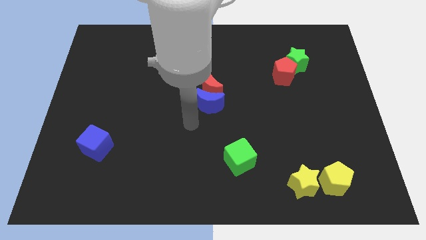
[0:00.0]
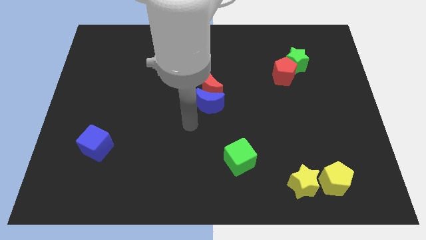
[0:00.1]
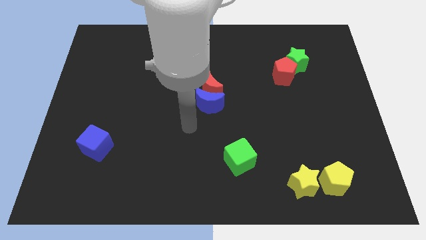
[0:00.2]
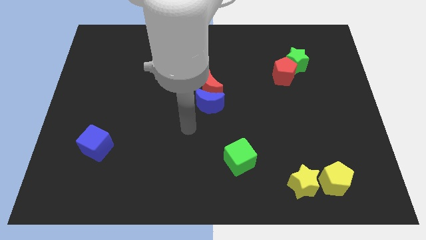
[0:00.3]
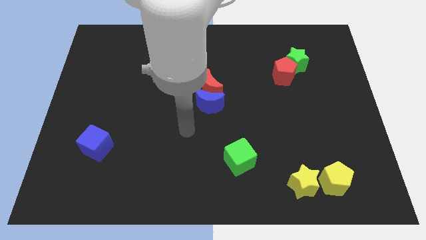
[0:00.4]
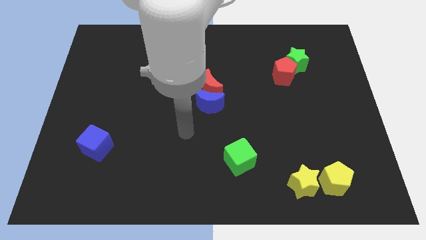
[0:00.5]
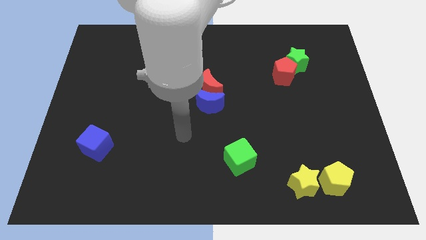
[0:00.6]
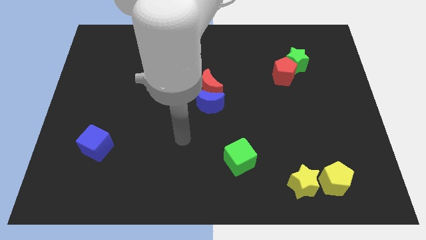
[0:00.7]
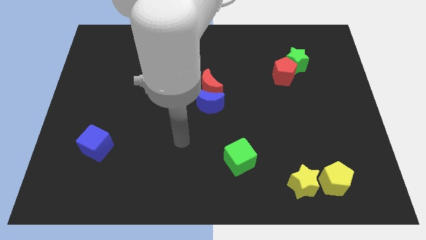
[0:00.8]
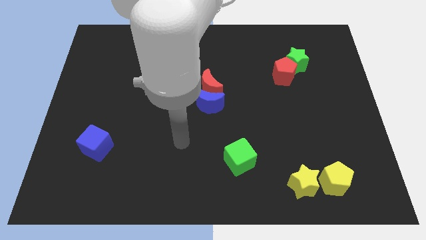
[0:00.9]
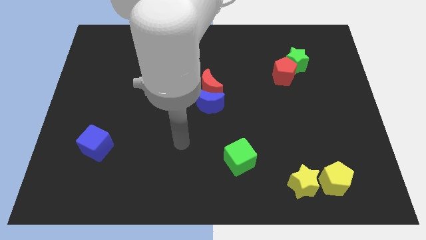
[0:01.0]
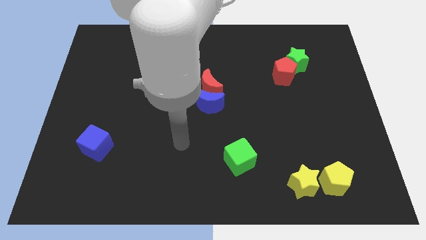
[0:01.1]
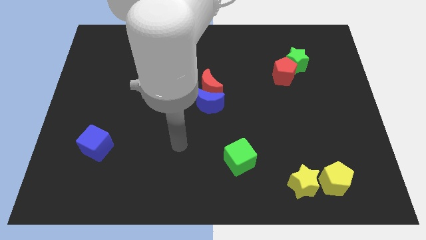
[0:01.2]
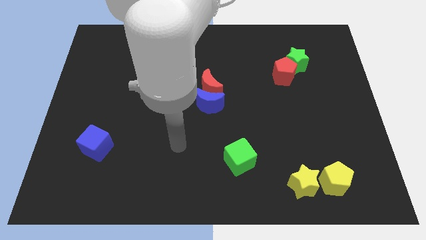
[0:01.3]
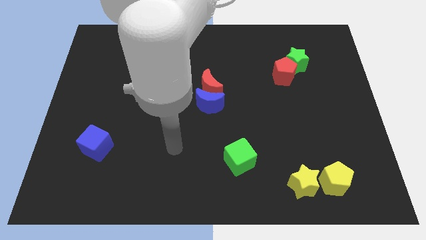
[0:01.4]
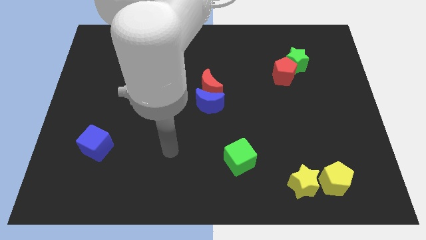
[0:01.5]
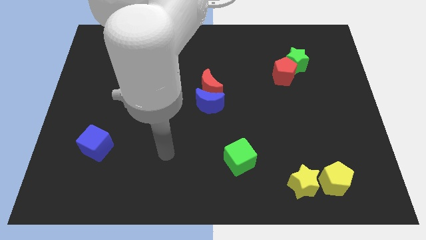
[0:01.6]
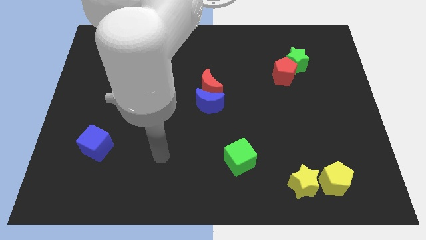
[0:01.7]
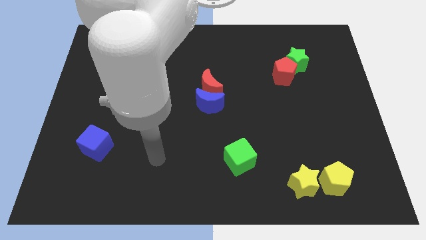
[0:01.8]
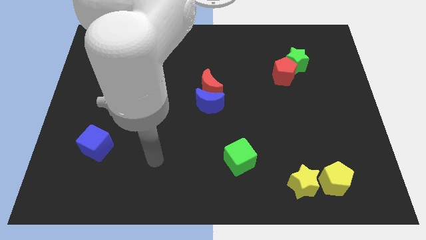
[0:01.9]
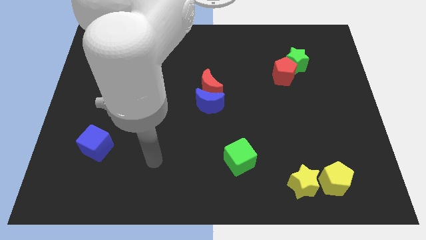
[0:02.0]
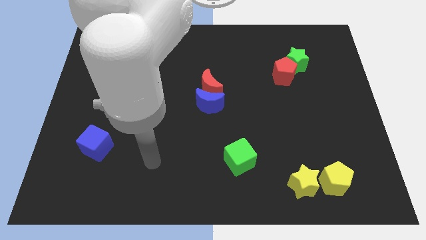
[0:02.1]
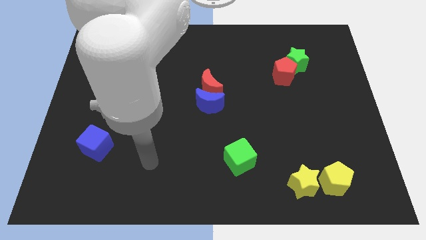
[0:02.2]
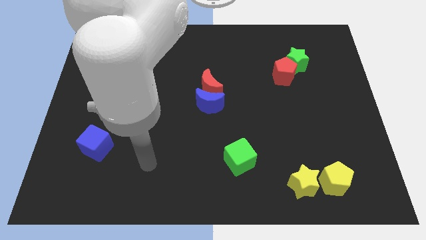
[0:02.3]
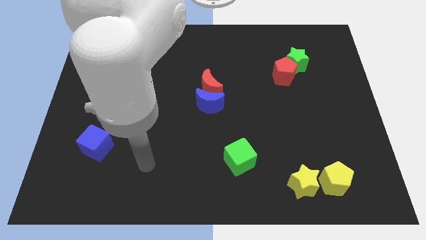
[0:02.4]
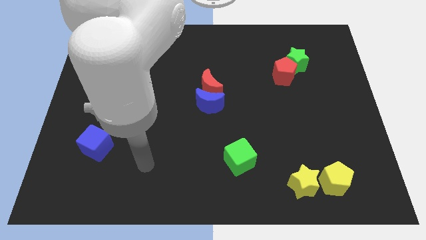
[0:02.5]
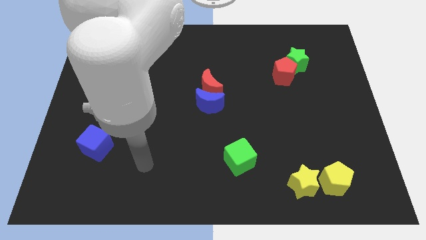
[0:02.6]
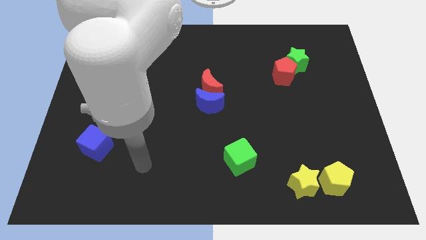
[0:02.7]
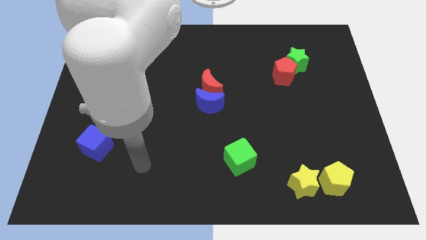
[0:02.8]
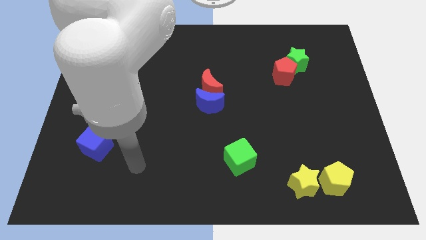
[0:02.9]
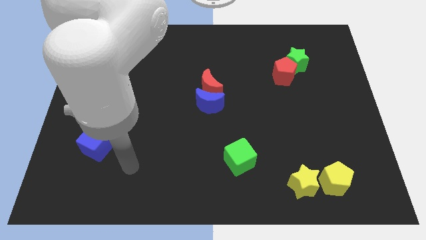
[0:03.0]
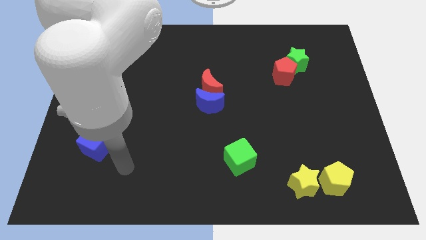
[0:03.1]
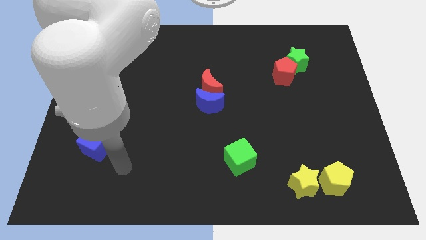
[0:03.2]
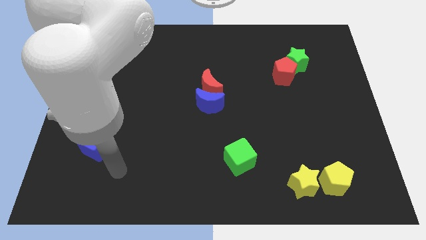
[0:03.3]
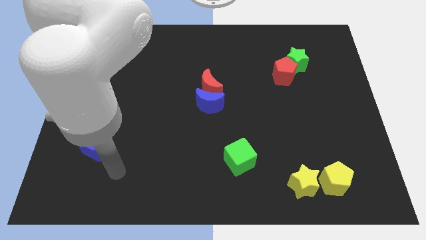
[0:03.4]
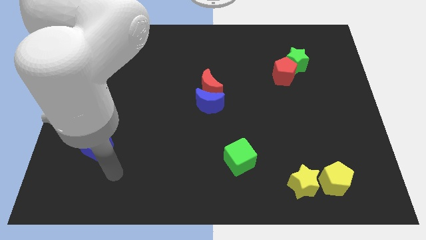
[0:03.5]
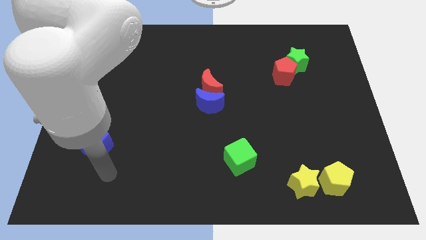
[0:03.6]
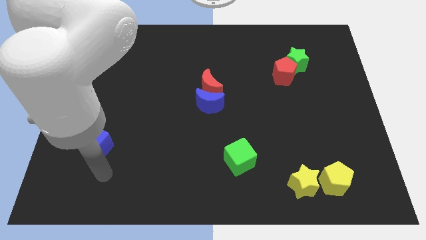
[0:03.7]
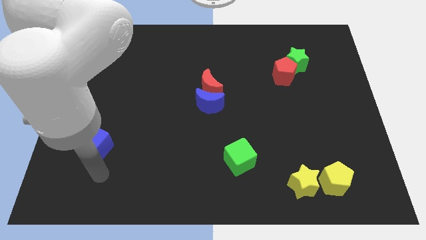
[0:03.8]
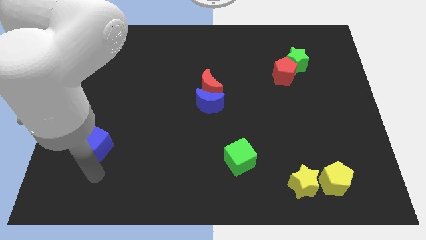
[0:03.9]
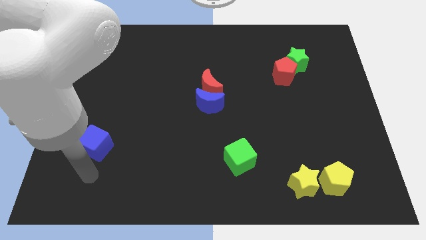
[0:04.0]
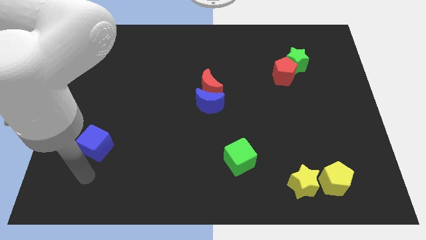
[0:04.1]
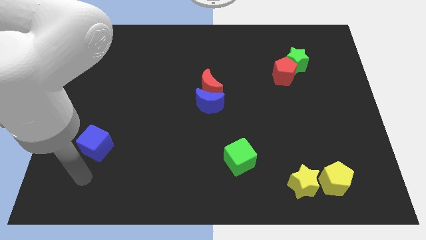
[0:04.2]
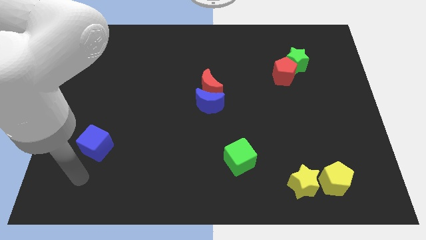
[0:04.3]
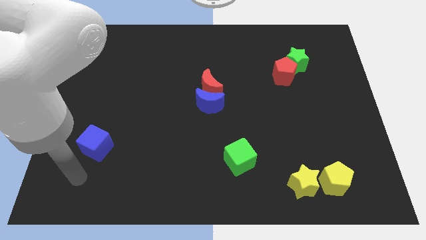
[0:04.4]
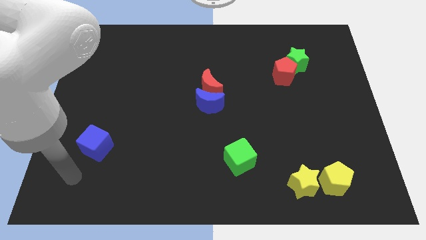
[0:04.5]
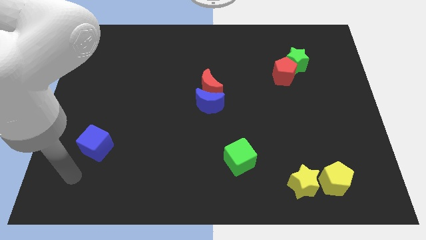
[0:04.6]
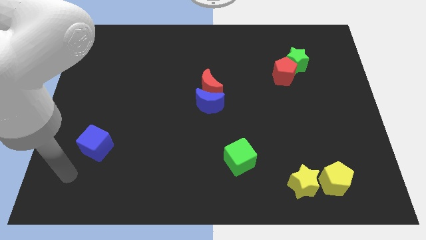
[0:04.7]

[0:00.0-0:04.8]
move the arm from the center to the left bottom

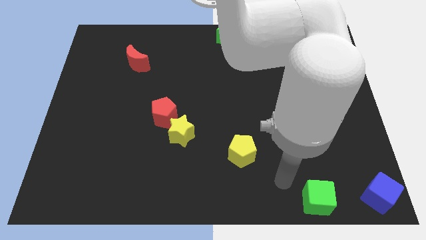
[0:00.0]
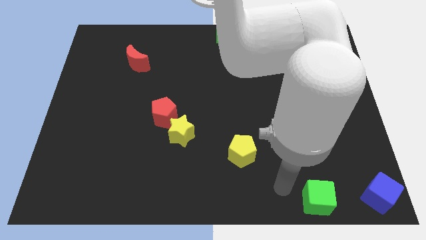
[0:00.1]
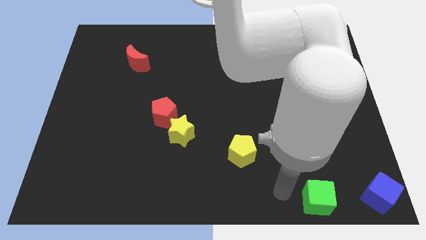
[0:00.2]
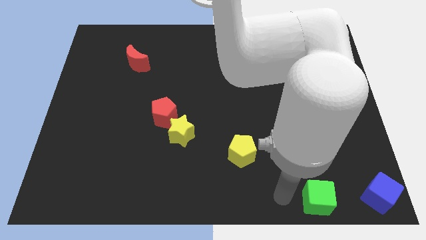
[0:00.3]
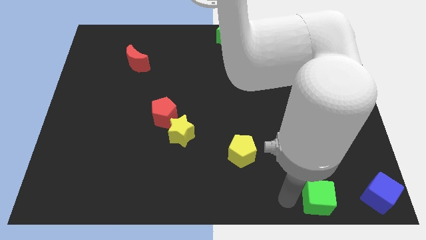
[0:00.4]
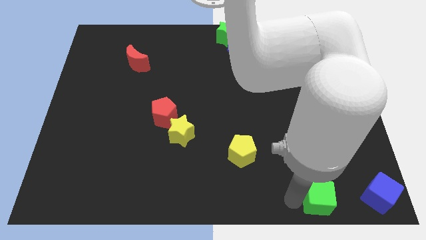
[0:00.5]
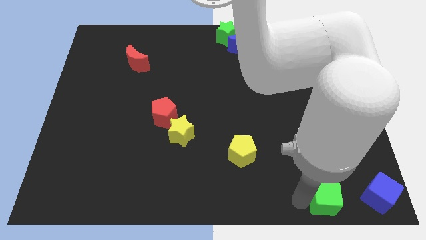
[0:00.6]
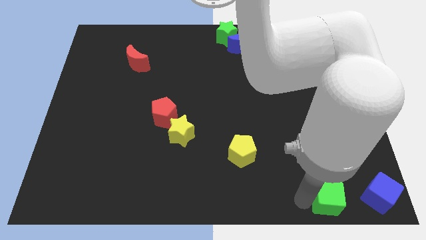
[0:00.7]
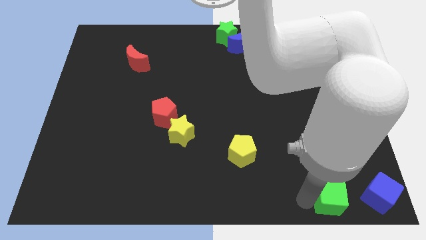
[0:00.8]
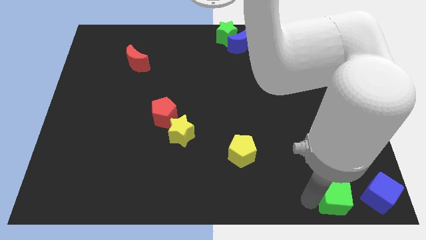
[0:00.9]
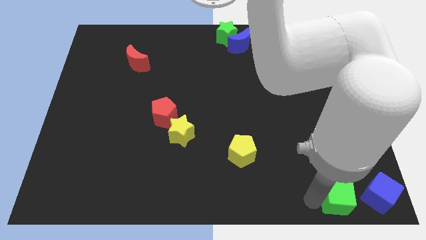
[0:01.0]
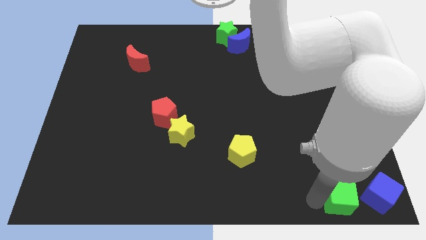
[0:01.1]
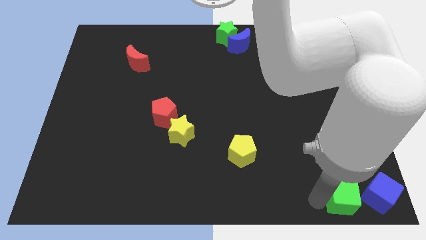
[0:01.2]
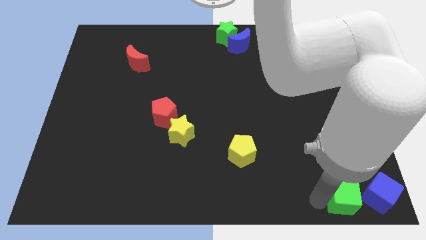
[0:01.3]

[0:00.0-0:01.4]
move the green cube left beside the blue cube

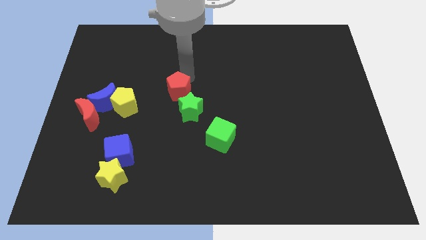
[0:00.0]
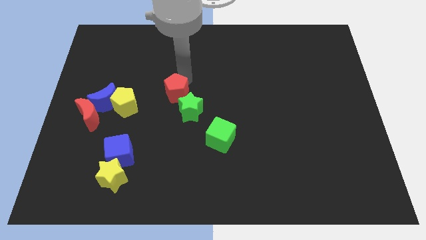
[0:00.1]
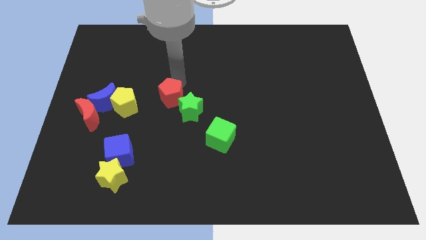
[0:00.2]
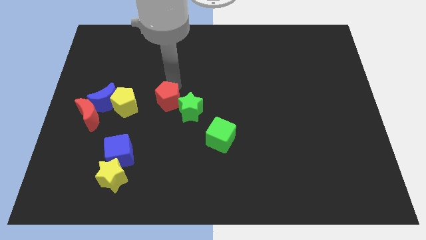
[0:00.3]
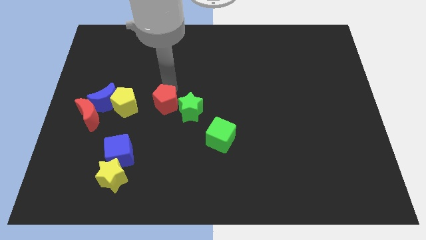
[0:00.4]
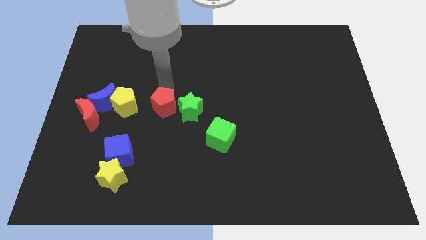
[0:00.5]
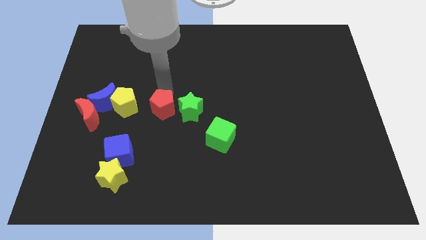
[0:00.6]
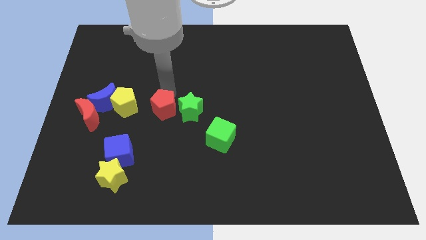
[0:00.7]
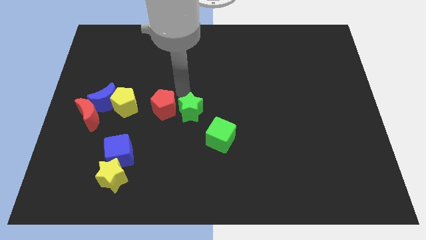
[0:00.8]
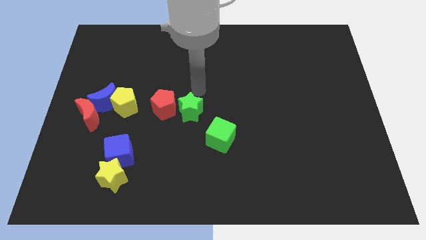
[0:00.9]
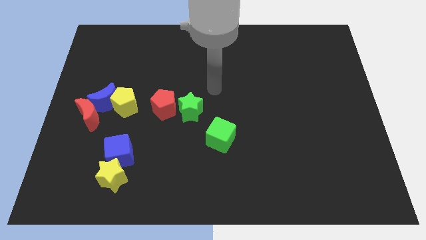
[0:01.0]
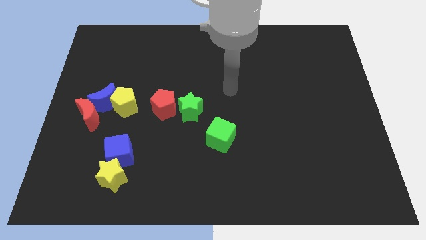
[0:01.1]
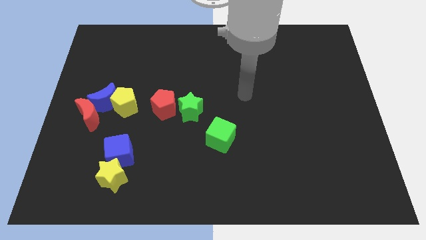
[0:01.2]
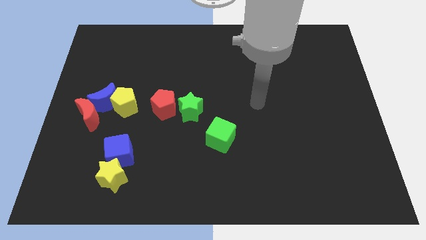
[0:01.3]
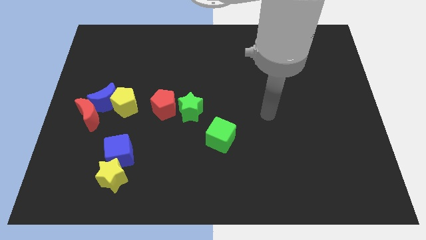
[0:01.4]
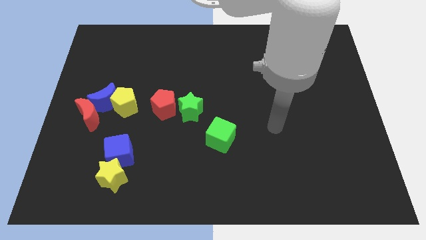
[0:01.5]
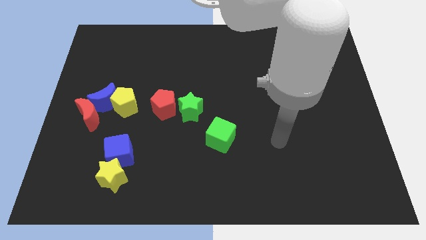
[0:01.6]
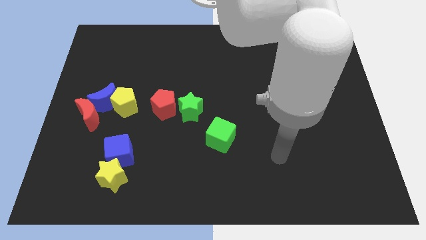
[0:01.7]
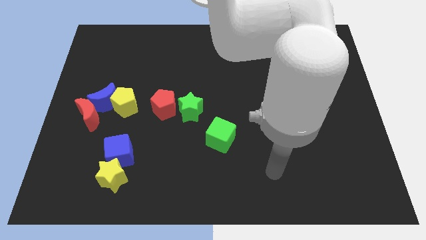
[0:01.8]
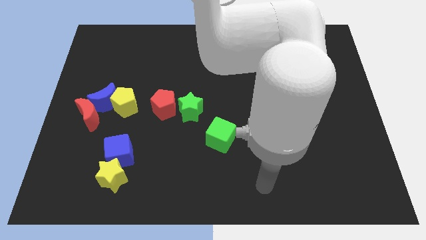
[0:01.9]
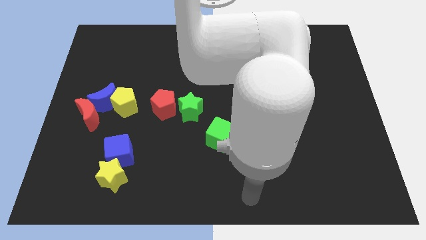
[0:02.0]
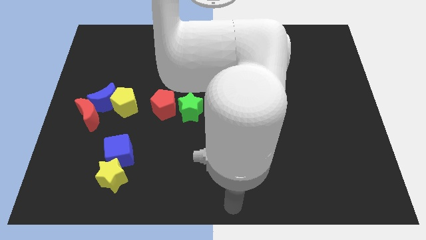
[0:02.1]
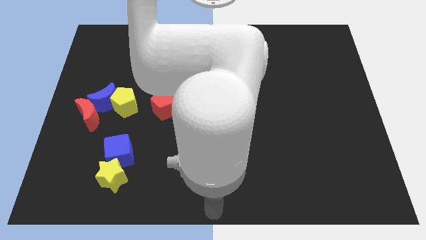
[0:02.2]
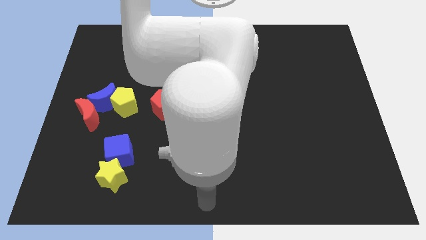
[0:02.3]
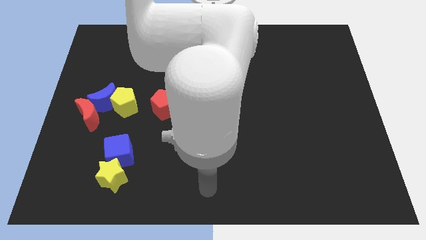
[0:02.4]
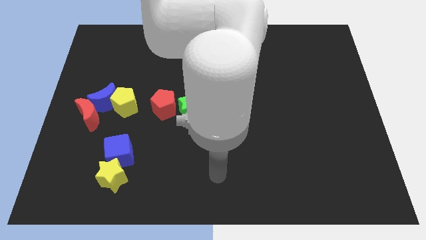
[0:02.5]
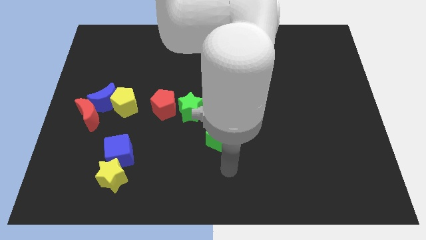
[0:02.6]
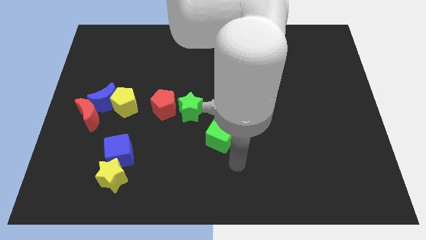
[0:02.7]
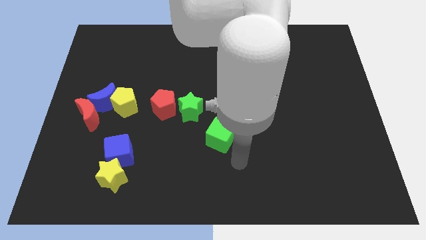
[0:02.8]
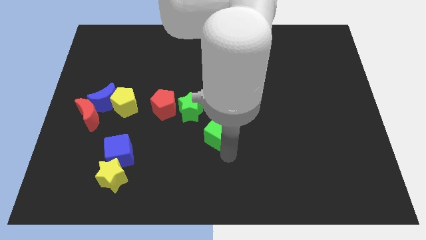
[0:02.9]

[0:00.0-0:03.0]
place the arm diagonal to the green cube
